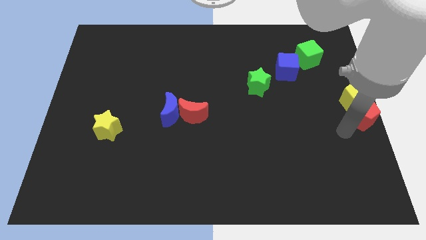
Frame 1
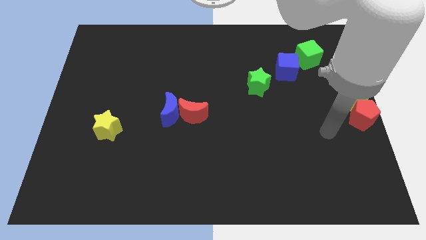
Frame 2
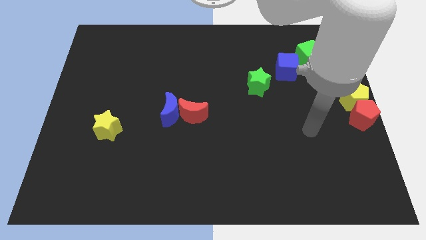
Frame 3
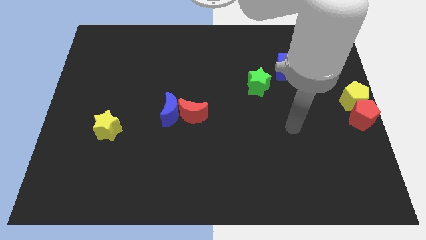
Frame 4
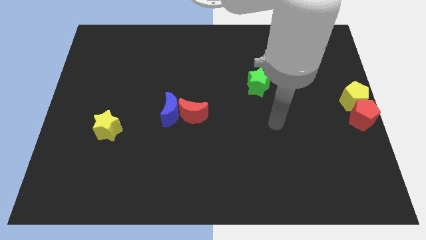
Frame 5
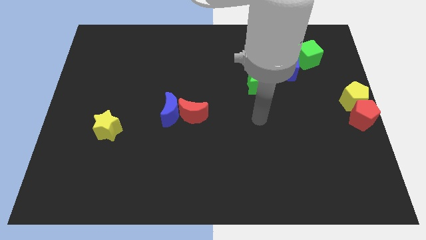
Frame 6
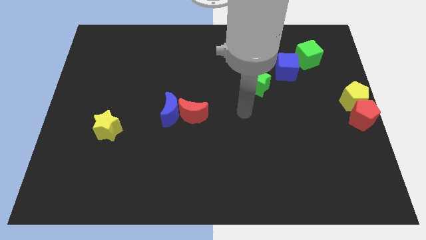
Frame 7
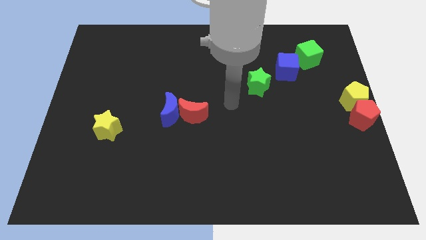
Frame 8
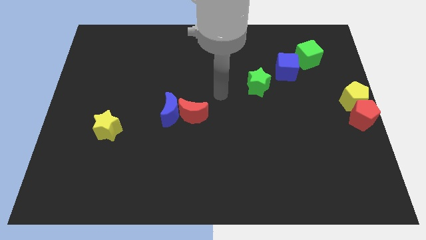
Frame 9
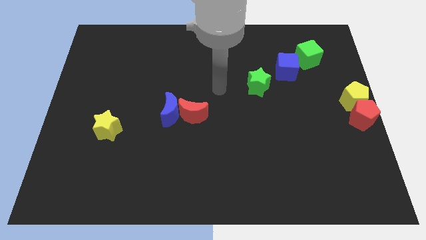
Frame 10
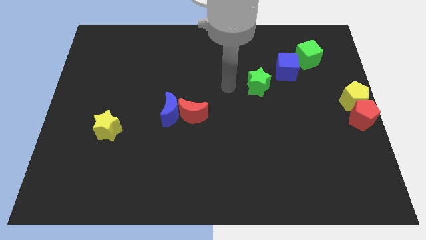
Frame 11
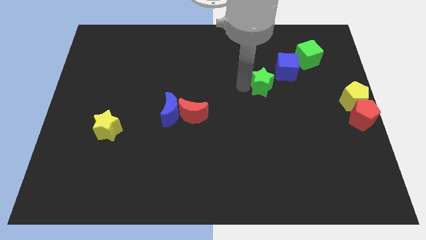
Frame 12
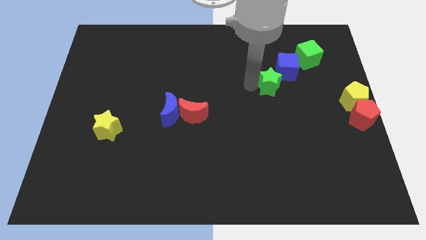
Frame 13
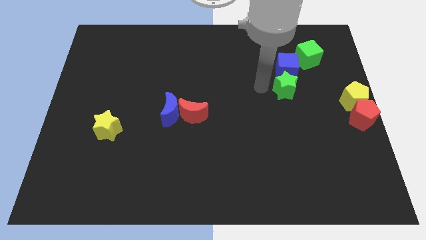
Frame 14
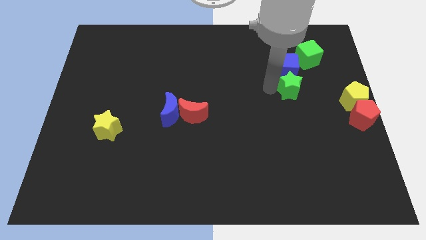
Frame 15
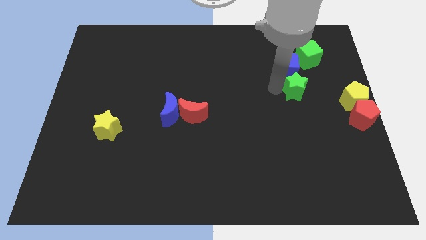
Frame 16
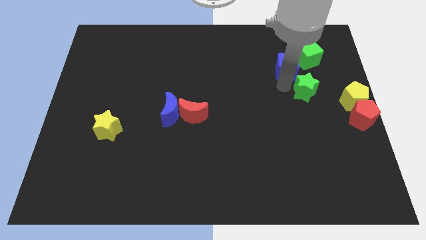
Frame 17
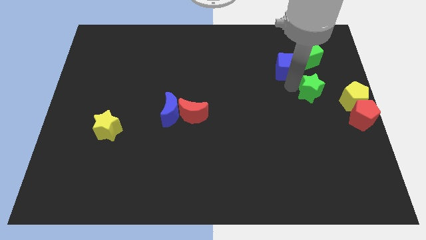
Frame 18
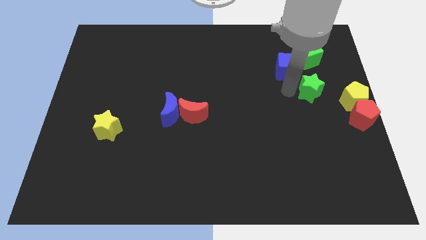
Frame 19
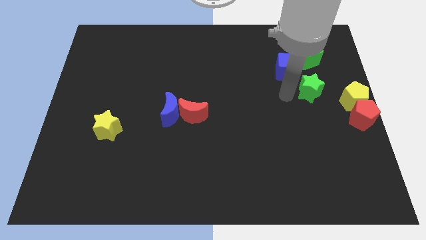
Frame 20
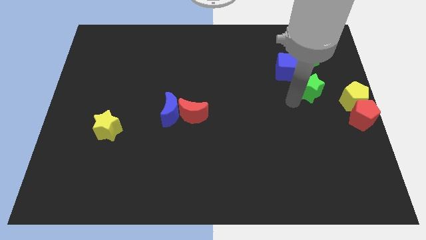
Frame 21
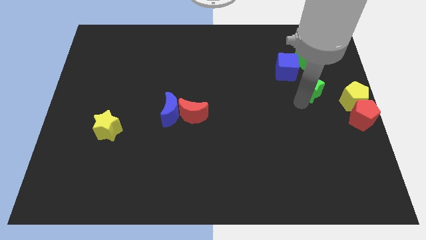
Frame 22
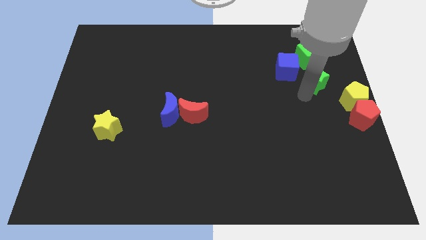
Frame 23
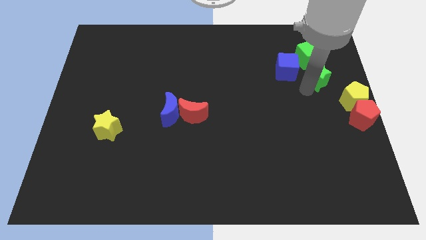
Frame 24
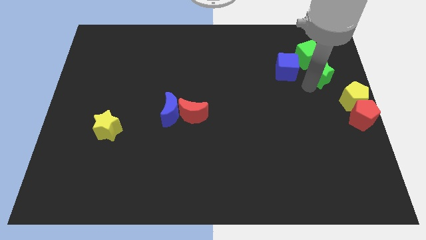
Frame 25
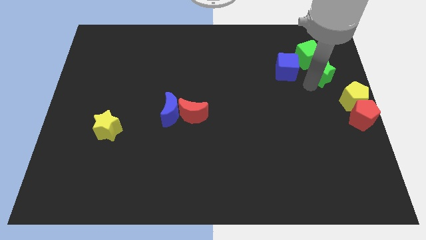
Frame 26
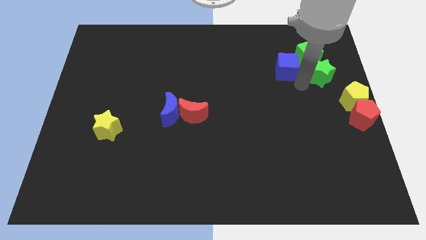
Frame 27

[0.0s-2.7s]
place the green star below the green cube

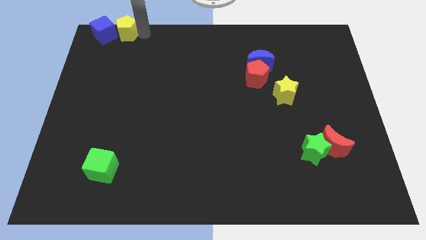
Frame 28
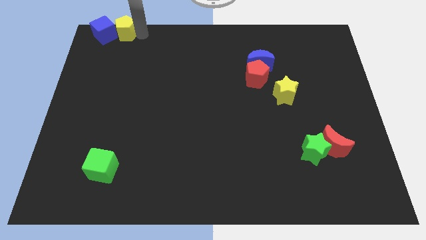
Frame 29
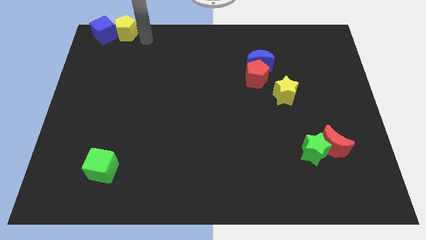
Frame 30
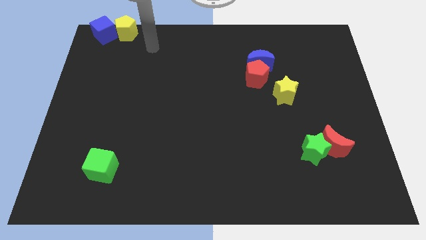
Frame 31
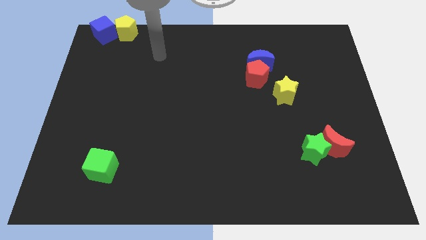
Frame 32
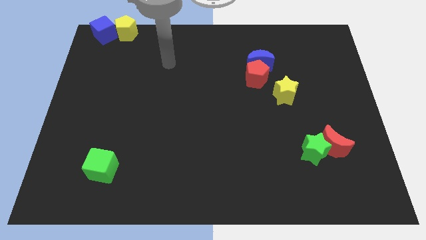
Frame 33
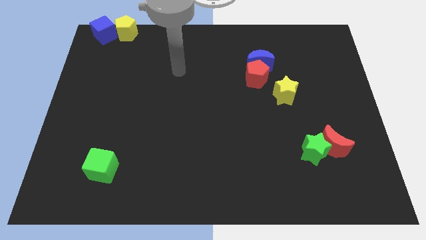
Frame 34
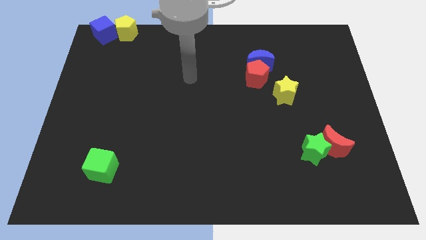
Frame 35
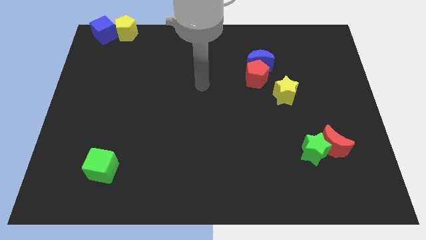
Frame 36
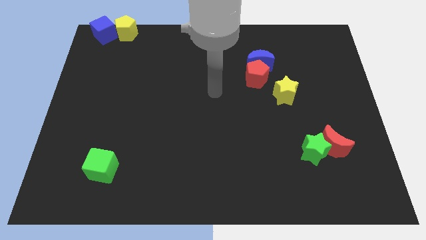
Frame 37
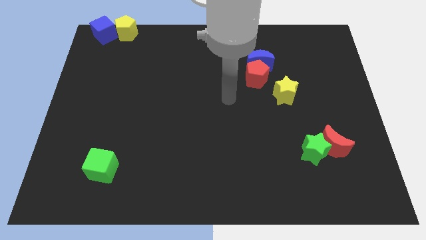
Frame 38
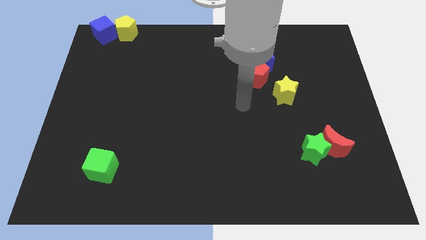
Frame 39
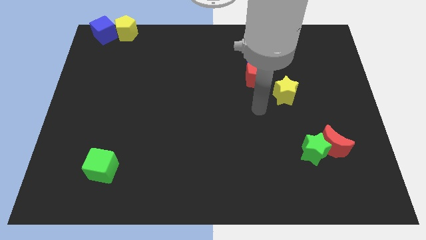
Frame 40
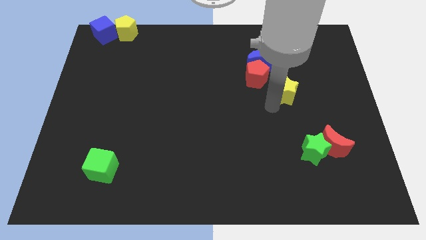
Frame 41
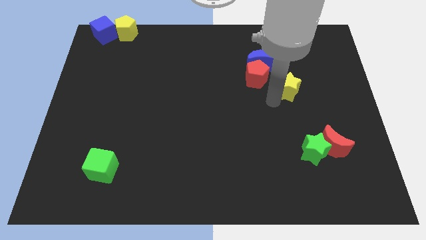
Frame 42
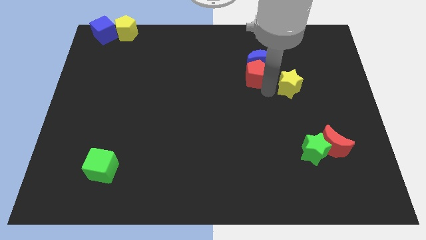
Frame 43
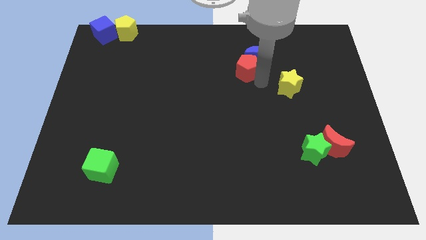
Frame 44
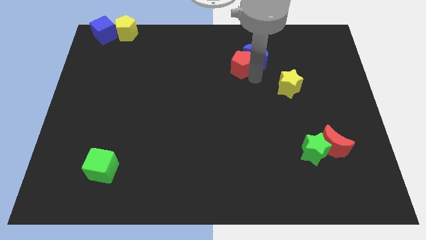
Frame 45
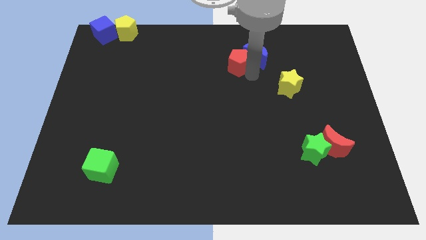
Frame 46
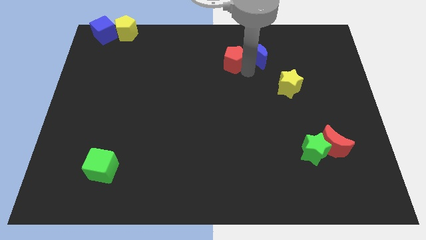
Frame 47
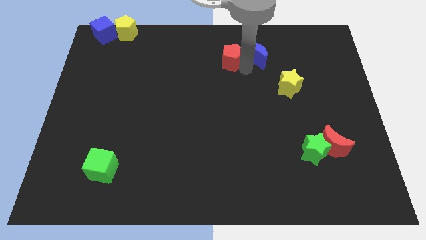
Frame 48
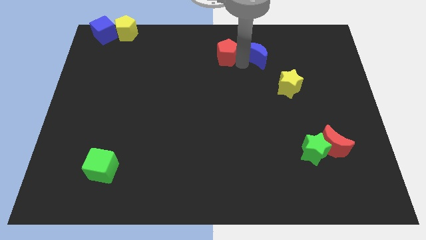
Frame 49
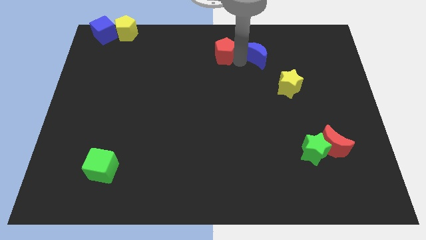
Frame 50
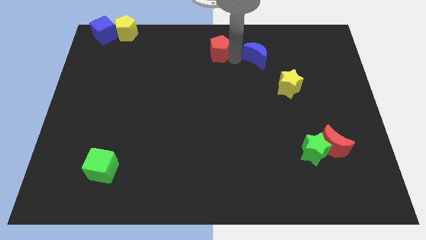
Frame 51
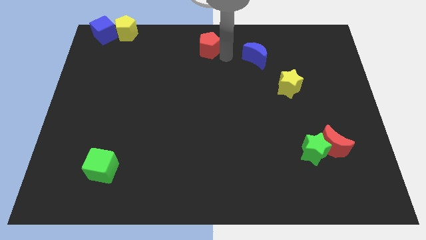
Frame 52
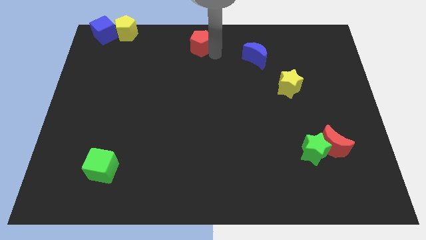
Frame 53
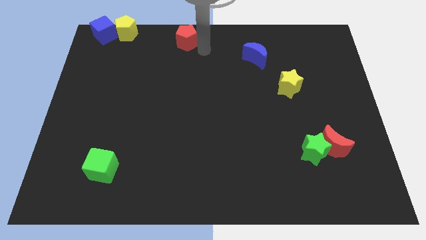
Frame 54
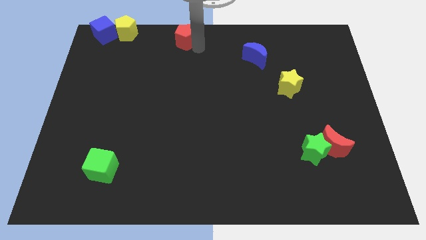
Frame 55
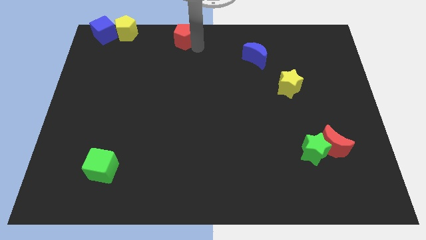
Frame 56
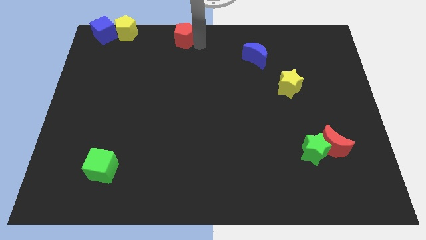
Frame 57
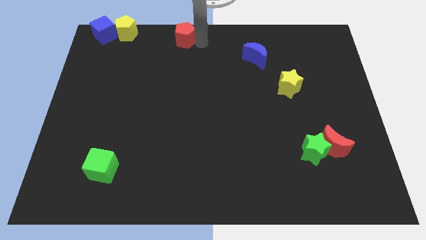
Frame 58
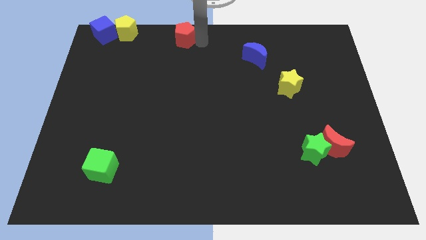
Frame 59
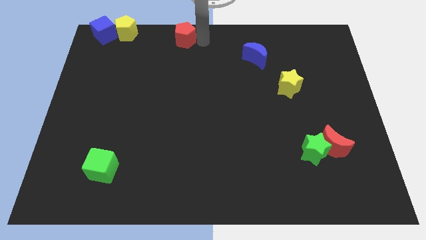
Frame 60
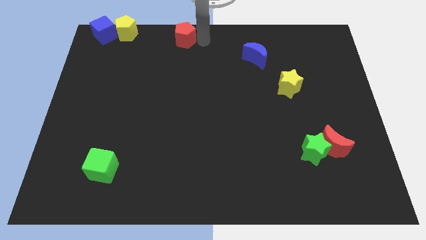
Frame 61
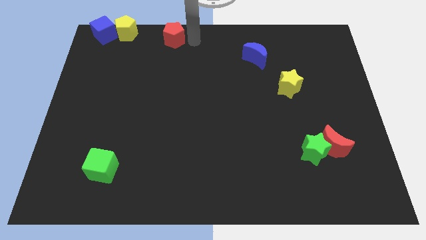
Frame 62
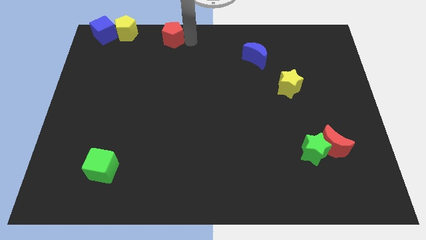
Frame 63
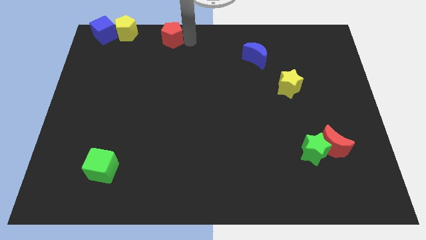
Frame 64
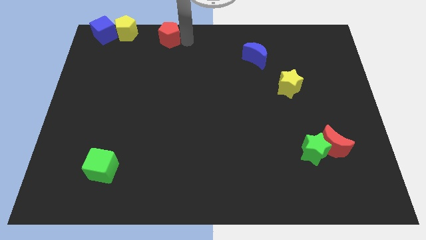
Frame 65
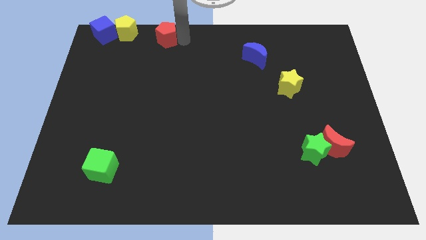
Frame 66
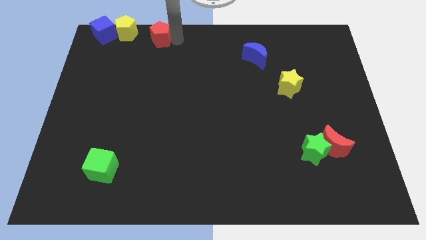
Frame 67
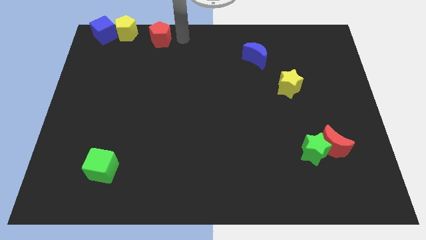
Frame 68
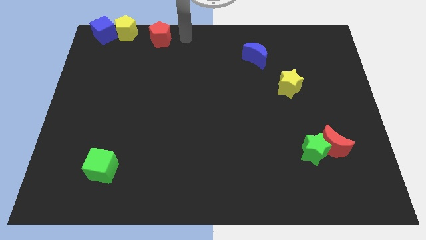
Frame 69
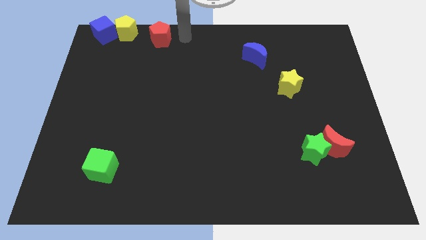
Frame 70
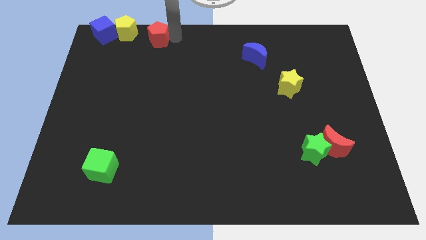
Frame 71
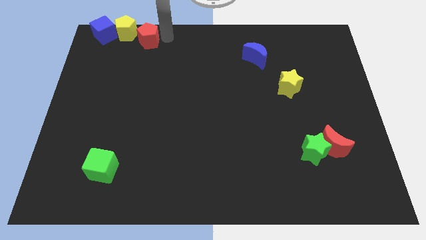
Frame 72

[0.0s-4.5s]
push the red pentagon to the right of the yellow pentagon

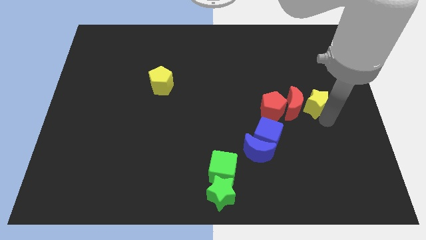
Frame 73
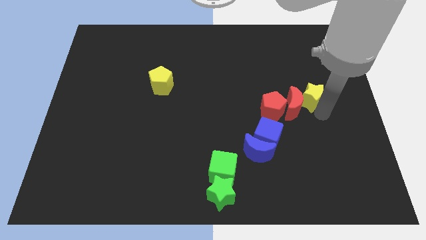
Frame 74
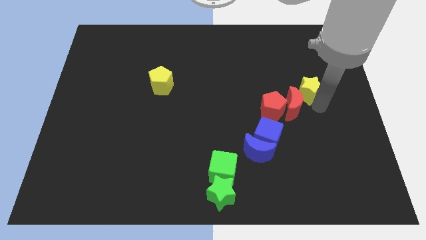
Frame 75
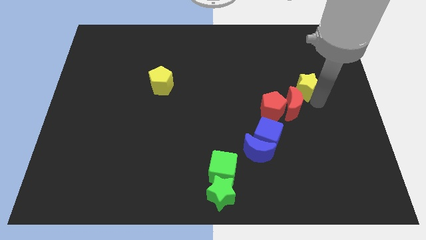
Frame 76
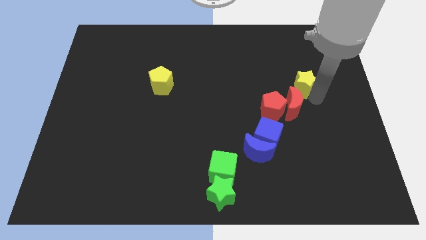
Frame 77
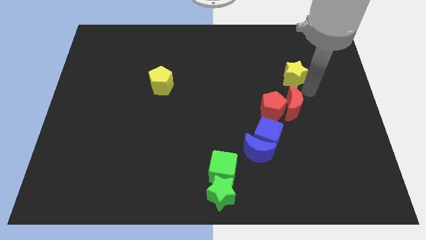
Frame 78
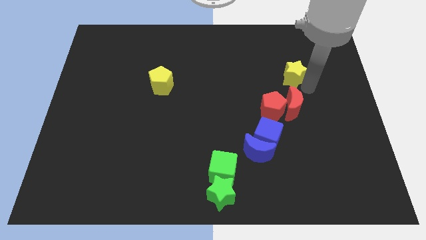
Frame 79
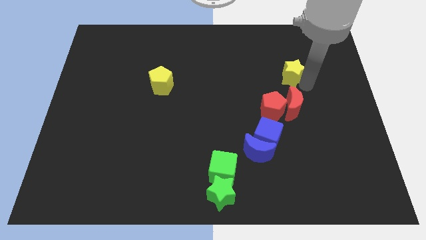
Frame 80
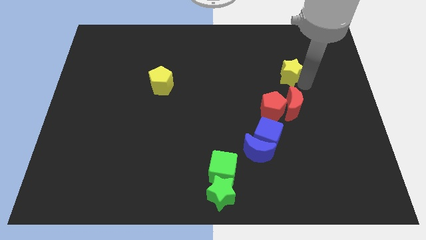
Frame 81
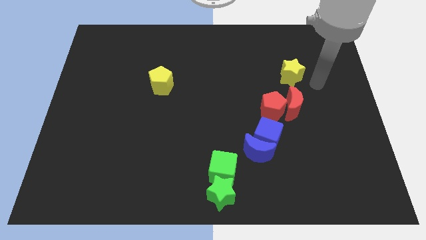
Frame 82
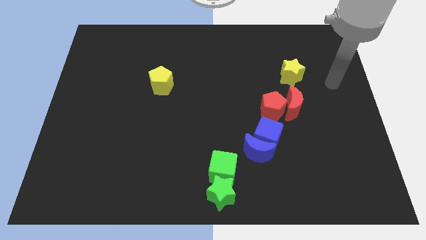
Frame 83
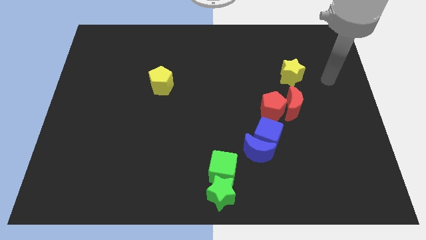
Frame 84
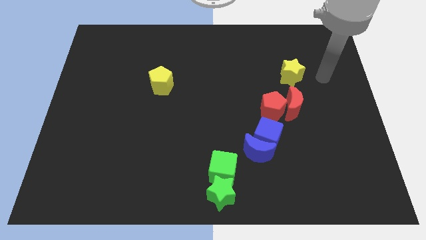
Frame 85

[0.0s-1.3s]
move the yellow star above the red moon

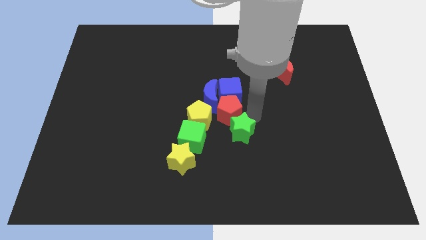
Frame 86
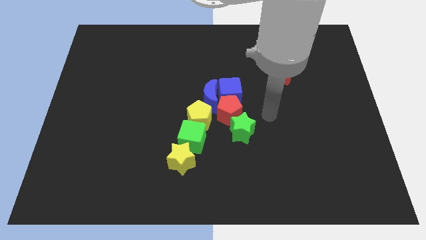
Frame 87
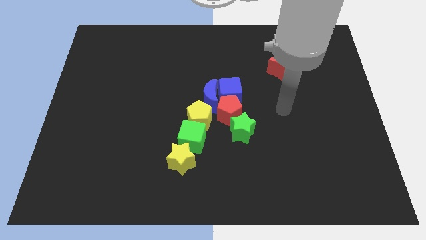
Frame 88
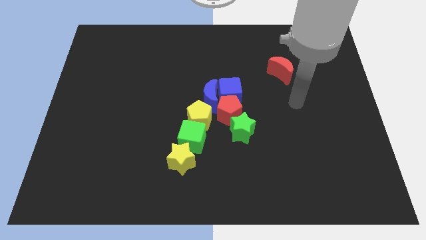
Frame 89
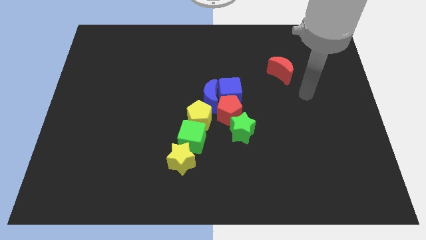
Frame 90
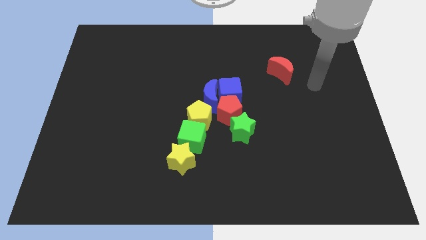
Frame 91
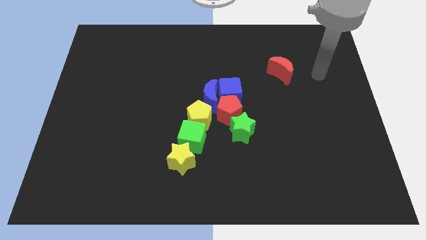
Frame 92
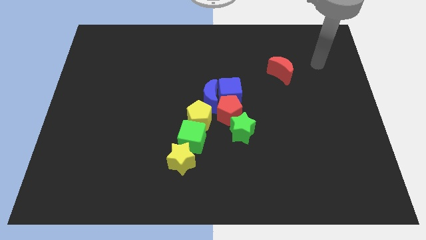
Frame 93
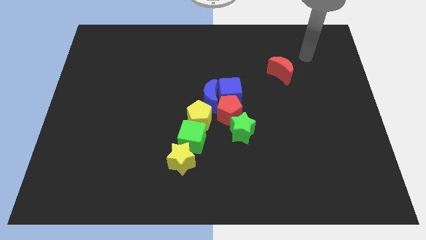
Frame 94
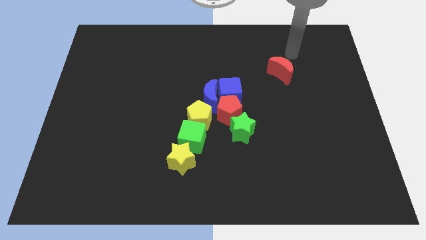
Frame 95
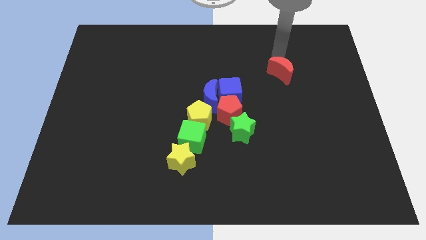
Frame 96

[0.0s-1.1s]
move your arm towards the red moon
